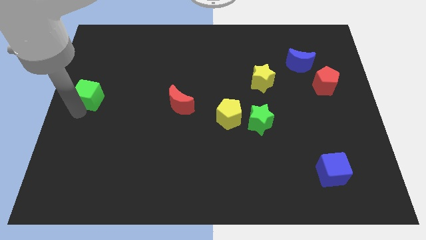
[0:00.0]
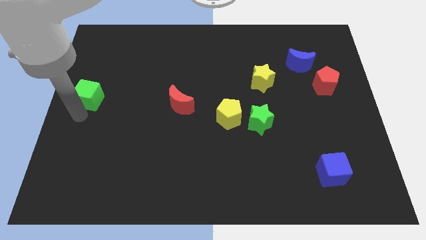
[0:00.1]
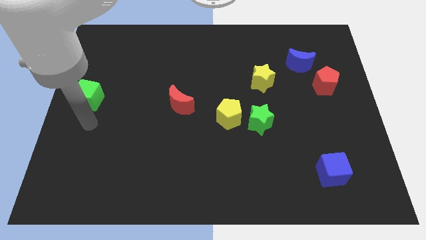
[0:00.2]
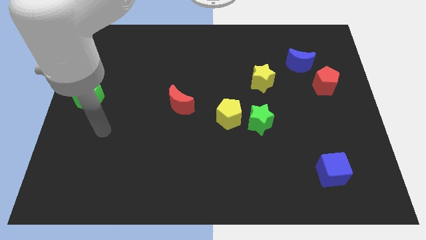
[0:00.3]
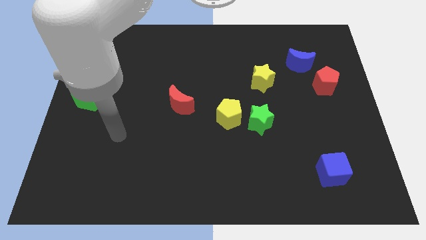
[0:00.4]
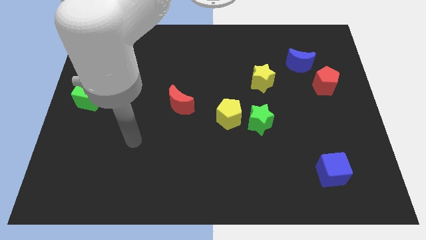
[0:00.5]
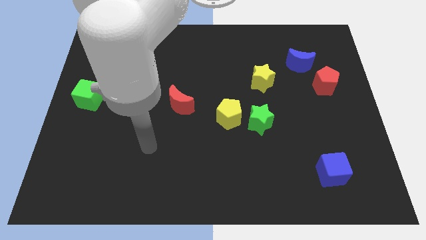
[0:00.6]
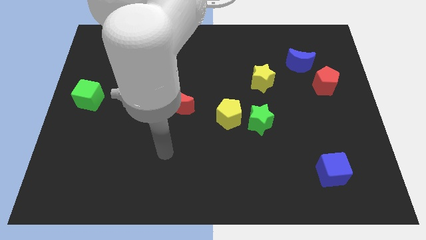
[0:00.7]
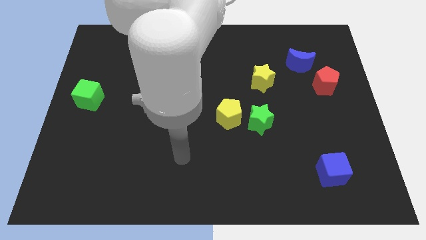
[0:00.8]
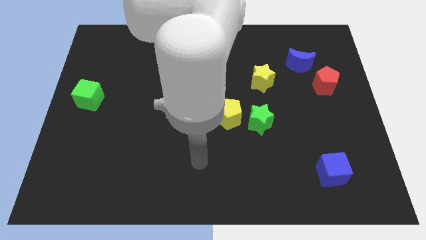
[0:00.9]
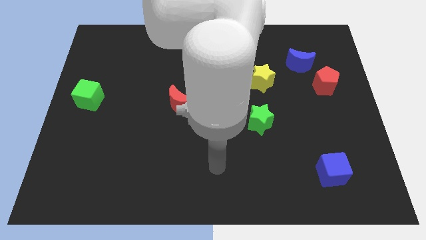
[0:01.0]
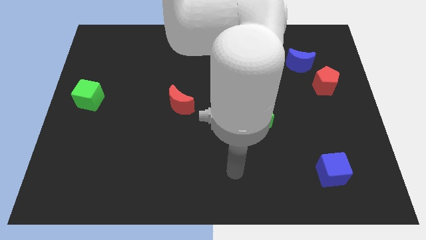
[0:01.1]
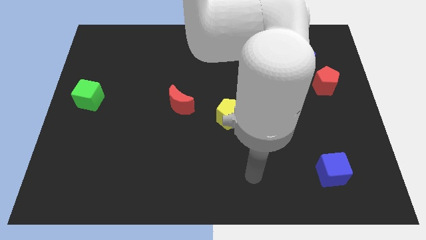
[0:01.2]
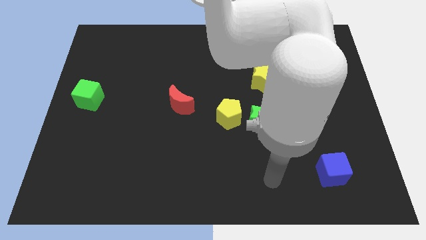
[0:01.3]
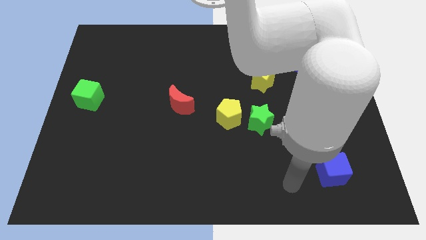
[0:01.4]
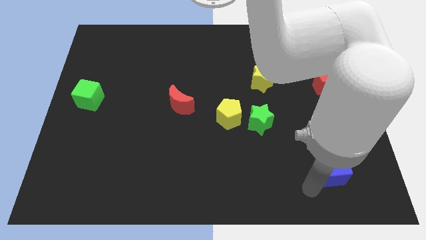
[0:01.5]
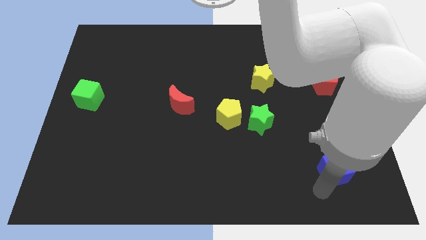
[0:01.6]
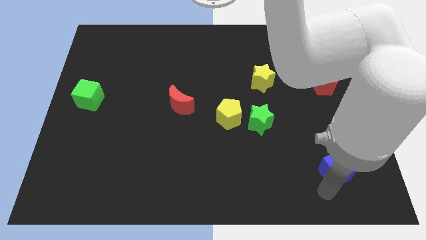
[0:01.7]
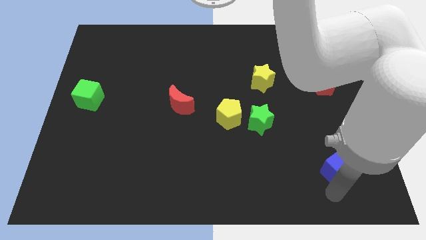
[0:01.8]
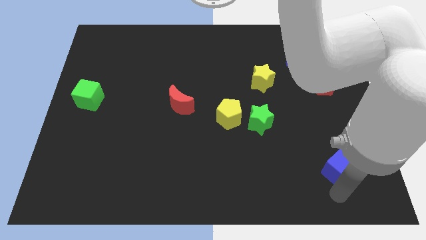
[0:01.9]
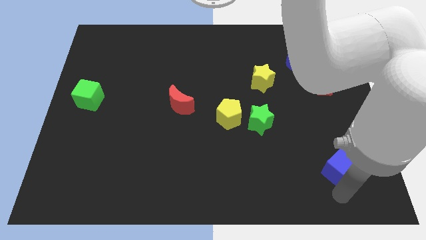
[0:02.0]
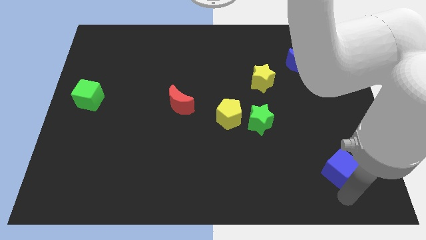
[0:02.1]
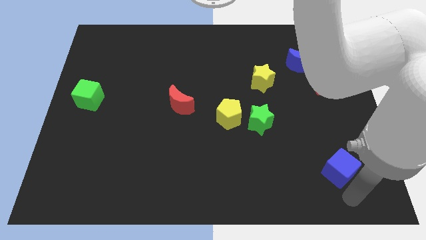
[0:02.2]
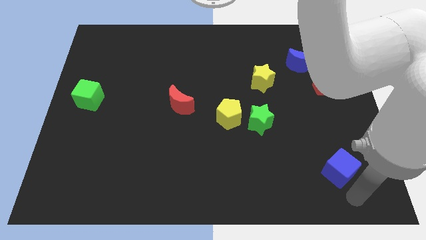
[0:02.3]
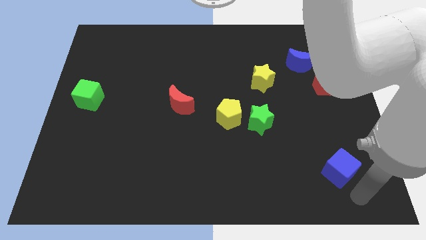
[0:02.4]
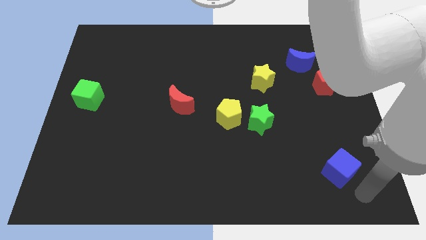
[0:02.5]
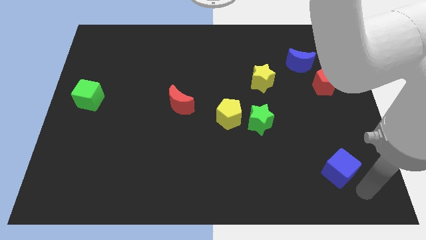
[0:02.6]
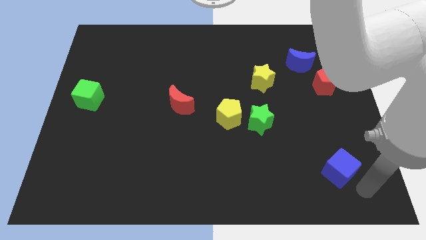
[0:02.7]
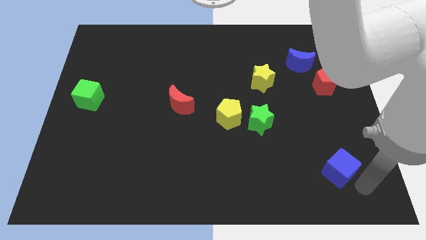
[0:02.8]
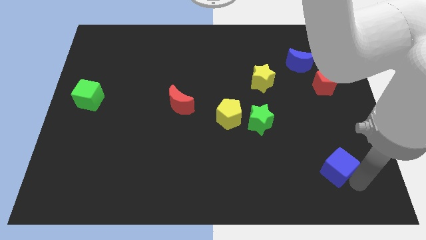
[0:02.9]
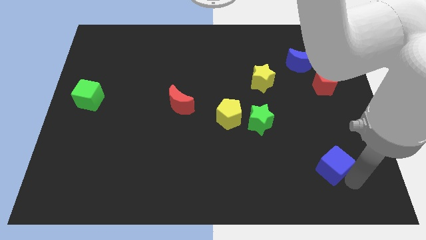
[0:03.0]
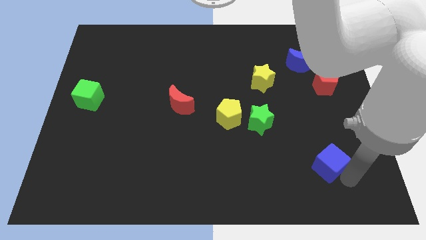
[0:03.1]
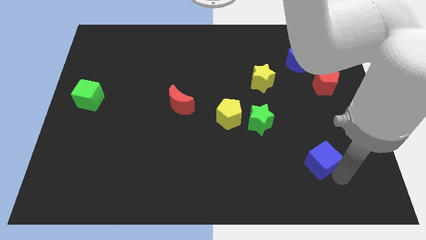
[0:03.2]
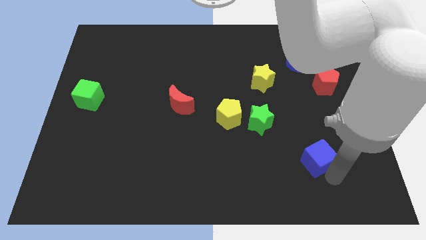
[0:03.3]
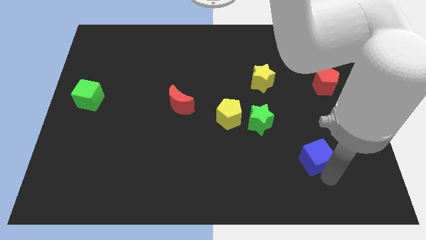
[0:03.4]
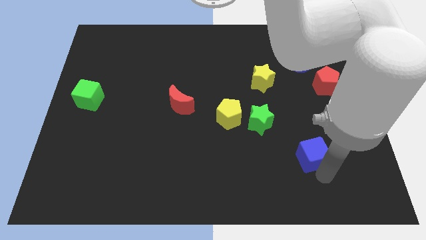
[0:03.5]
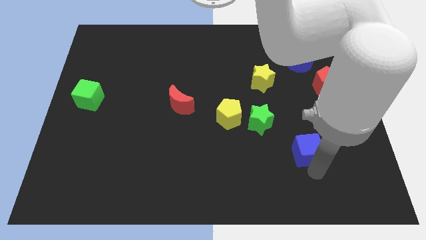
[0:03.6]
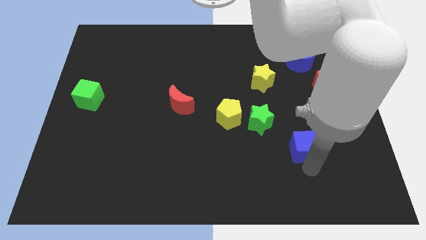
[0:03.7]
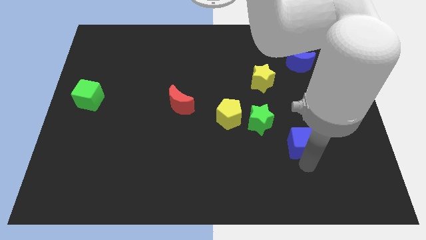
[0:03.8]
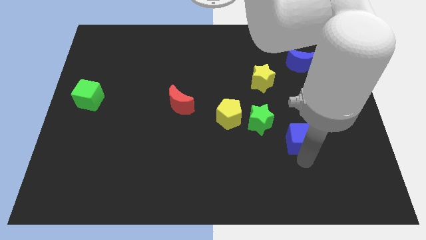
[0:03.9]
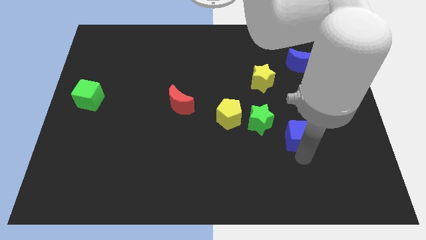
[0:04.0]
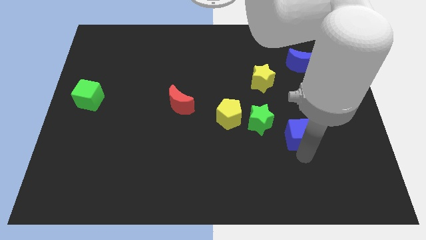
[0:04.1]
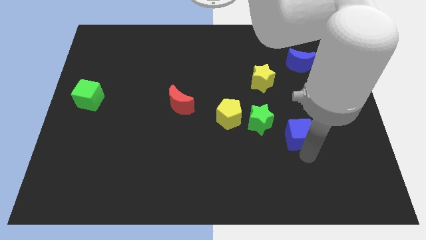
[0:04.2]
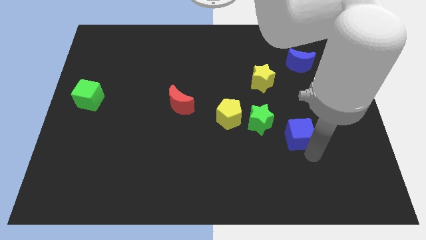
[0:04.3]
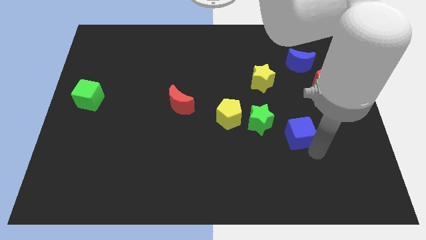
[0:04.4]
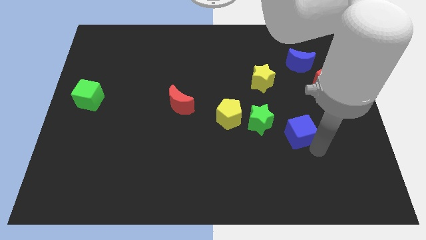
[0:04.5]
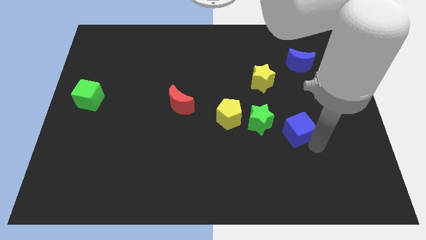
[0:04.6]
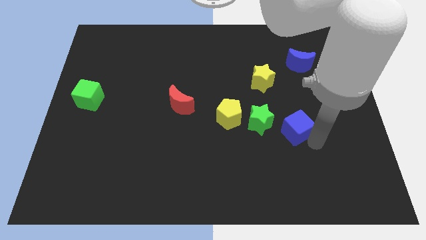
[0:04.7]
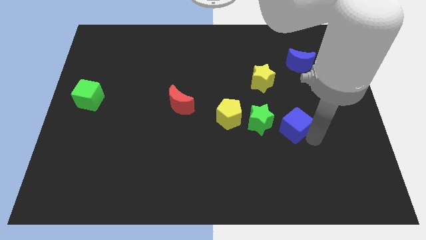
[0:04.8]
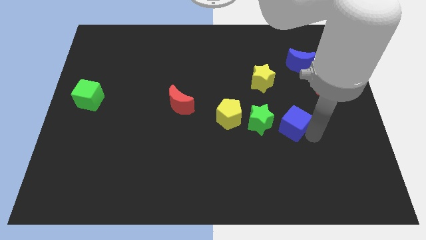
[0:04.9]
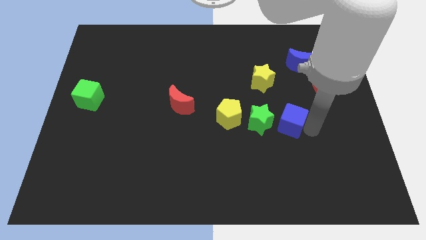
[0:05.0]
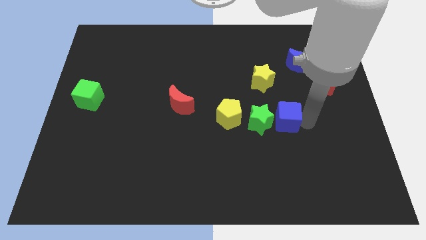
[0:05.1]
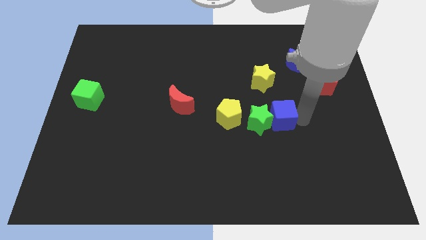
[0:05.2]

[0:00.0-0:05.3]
push the blue cube to the right of the green star

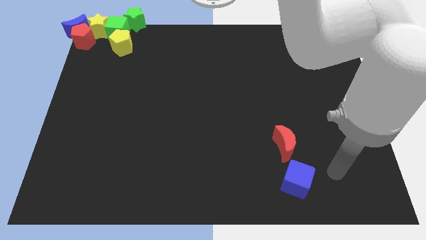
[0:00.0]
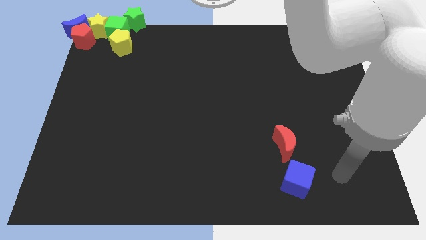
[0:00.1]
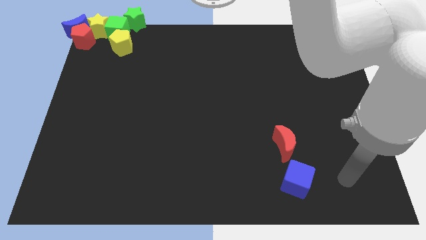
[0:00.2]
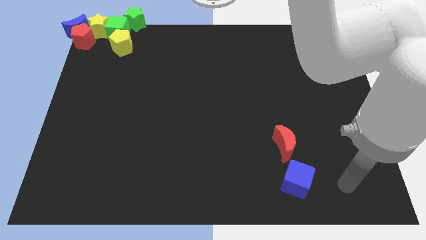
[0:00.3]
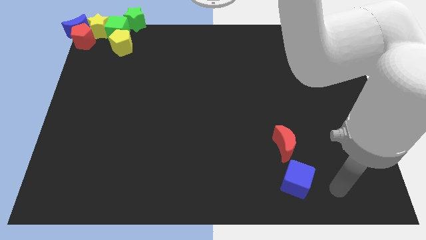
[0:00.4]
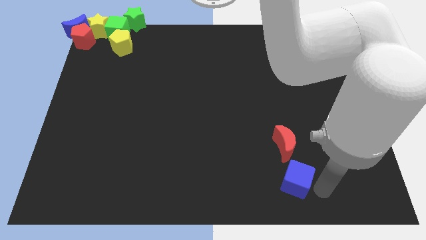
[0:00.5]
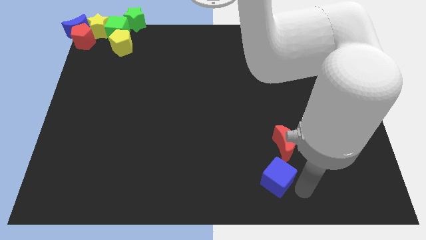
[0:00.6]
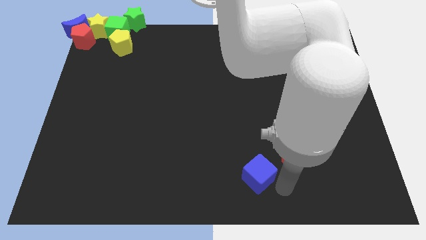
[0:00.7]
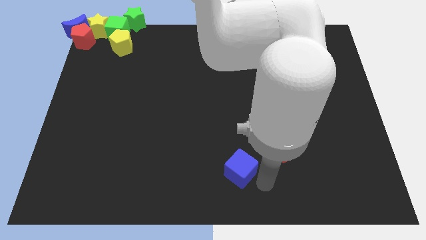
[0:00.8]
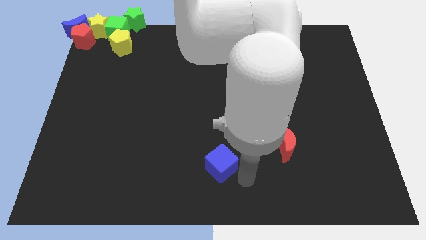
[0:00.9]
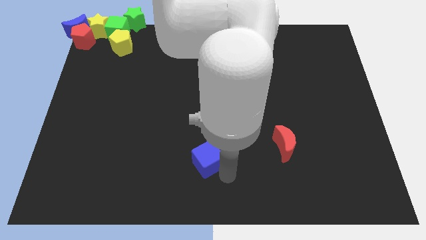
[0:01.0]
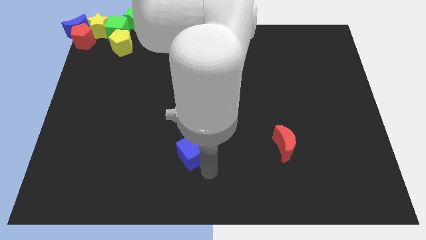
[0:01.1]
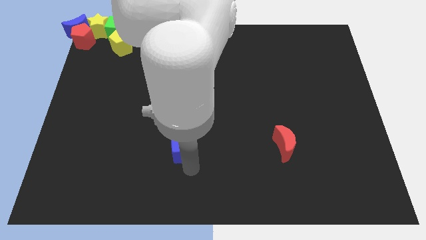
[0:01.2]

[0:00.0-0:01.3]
place the blue cube parallel left to the red moon

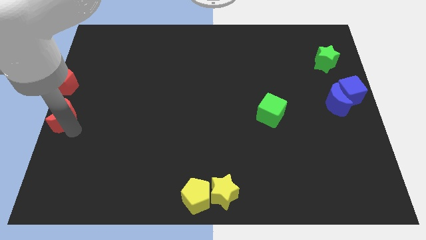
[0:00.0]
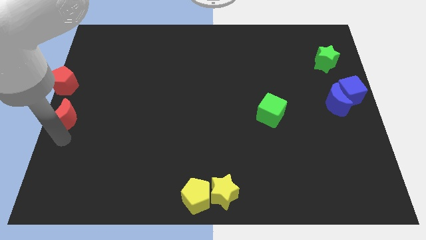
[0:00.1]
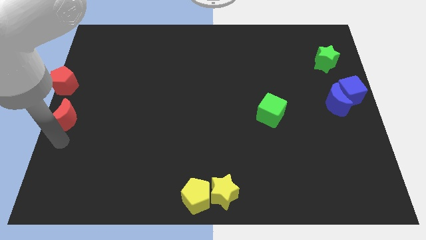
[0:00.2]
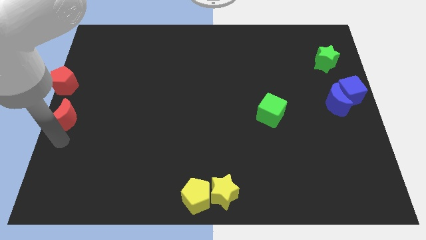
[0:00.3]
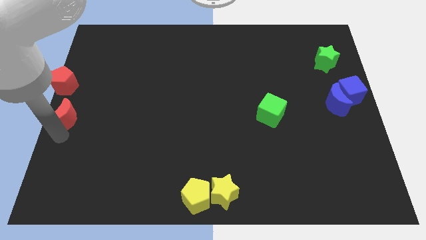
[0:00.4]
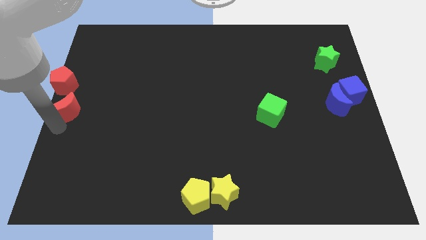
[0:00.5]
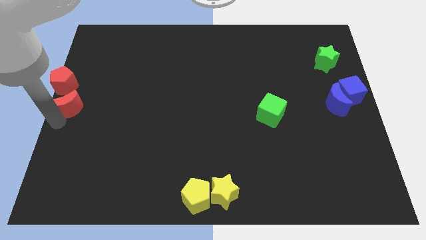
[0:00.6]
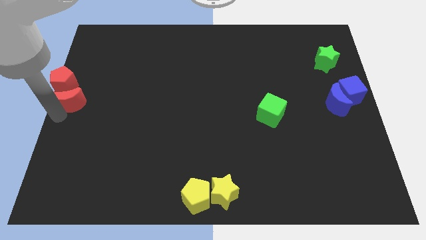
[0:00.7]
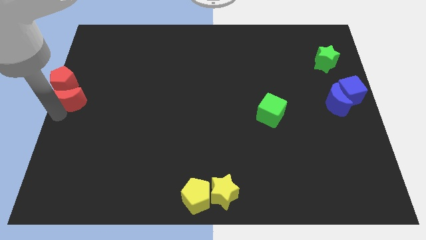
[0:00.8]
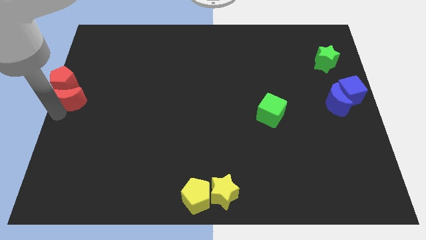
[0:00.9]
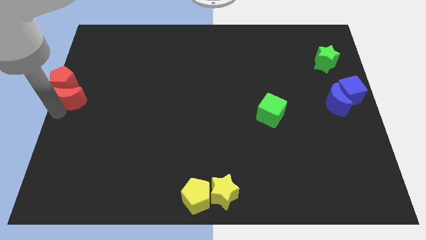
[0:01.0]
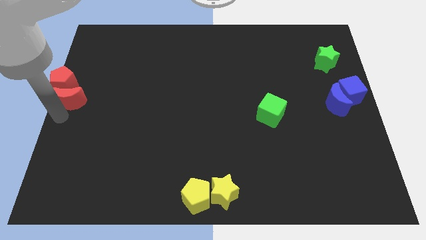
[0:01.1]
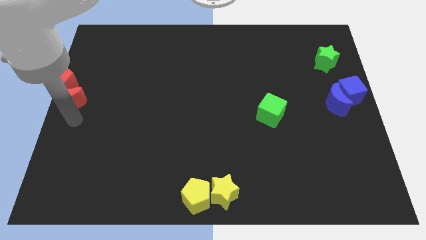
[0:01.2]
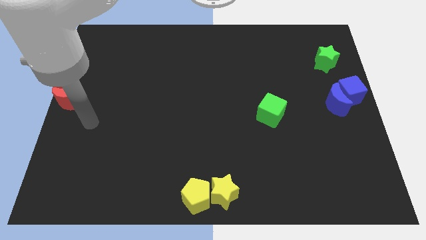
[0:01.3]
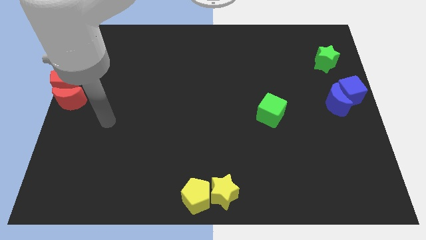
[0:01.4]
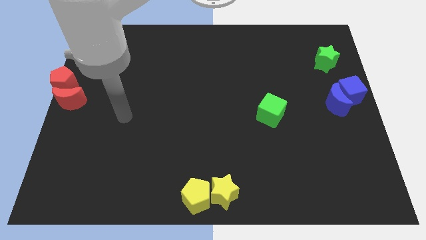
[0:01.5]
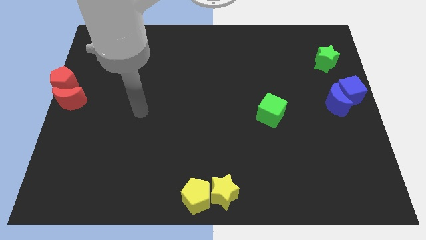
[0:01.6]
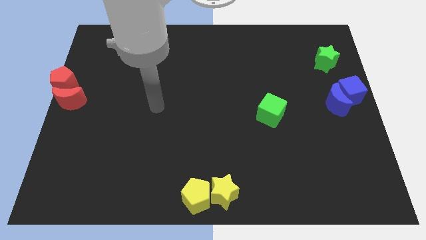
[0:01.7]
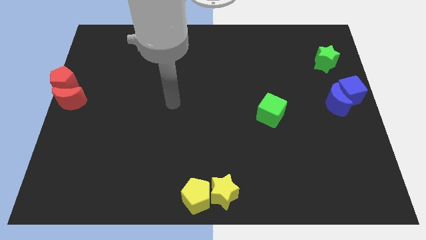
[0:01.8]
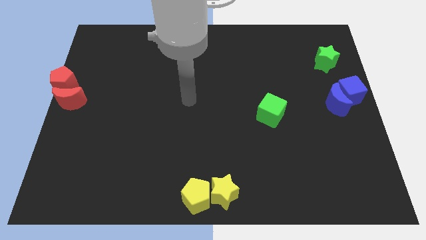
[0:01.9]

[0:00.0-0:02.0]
move the red moon into the red pentagon

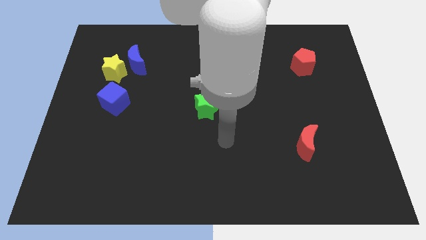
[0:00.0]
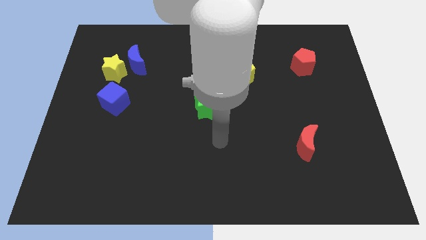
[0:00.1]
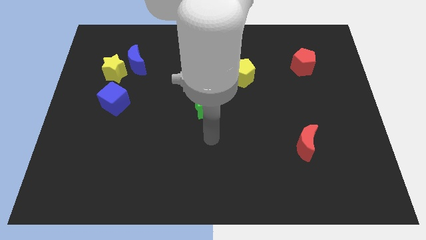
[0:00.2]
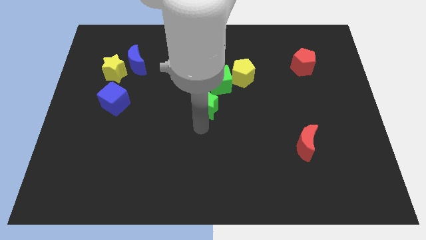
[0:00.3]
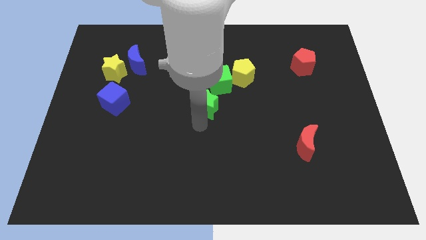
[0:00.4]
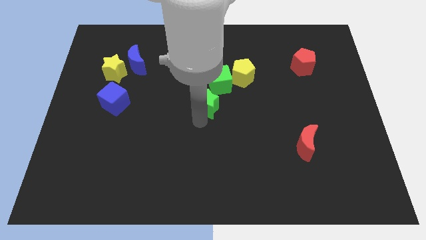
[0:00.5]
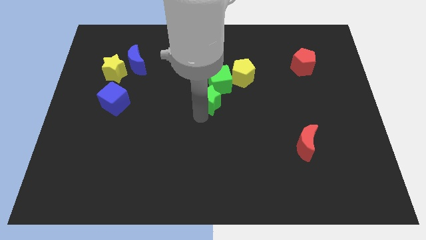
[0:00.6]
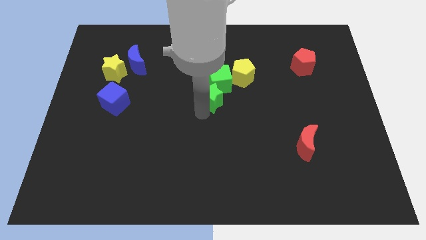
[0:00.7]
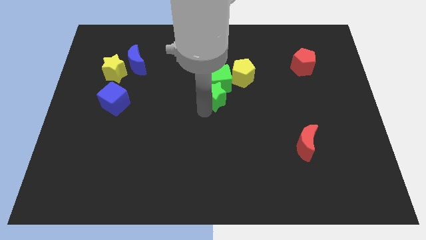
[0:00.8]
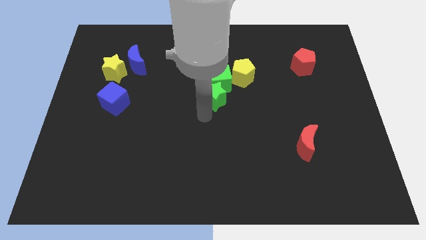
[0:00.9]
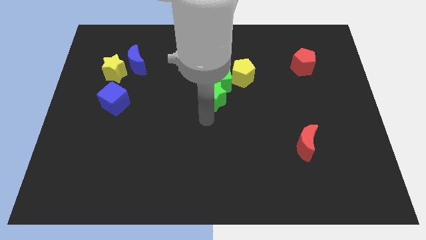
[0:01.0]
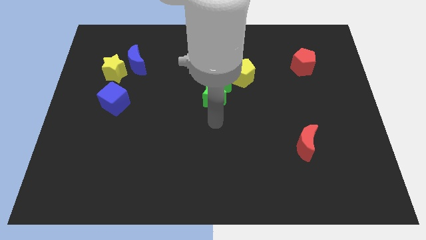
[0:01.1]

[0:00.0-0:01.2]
move the green star to the bottom left of the green cube
